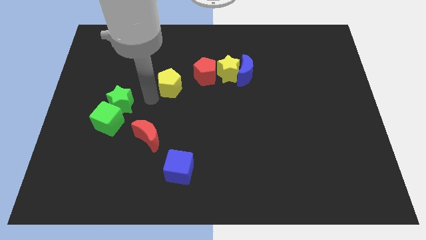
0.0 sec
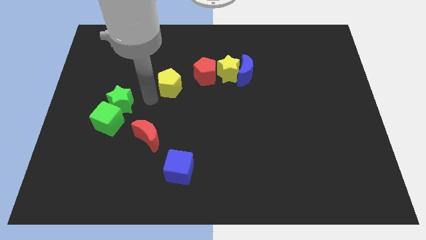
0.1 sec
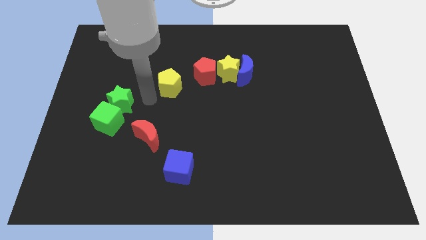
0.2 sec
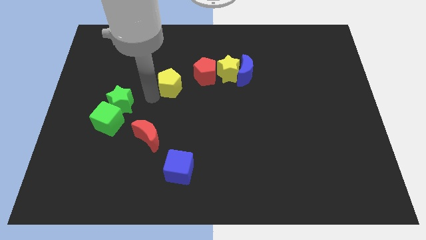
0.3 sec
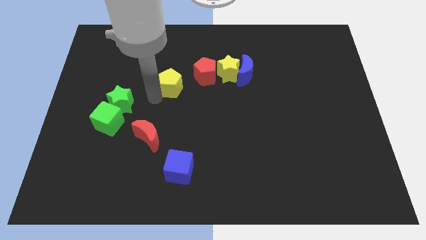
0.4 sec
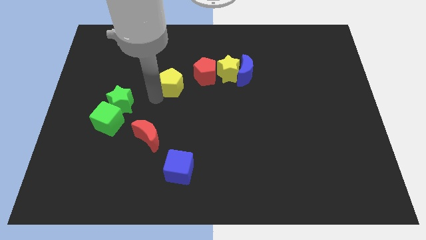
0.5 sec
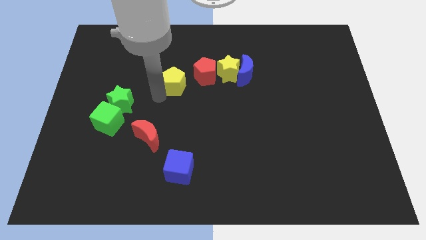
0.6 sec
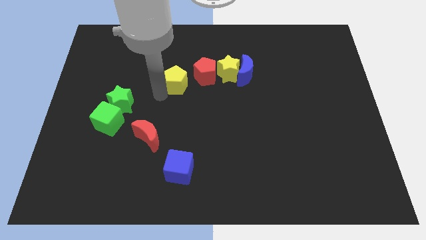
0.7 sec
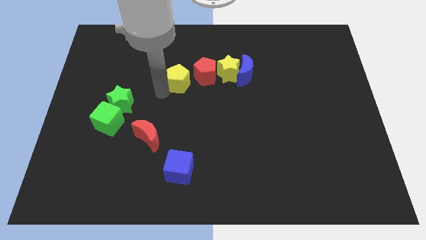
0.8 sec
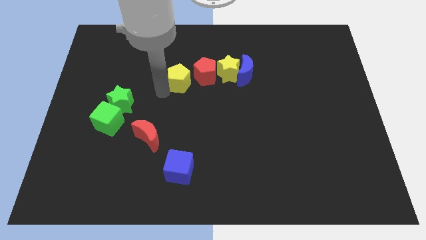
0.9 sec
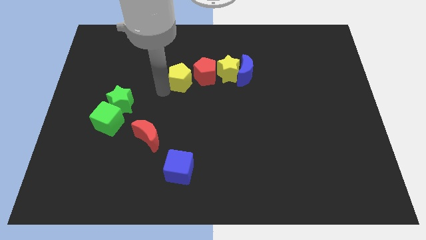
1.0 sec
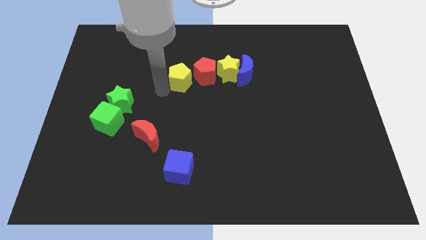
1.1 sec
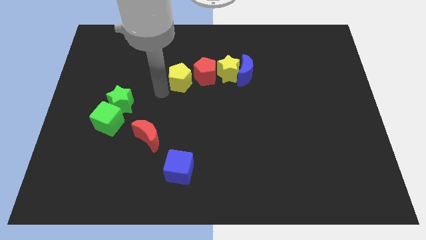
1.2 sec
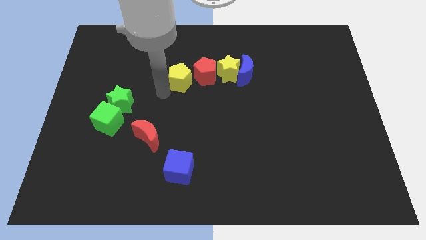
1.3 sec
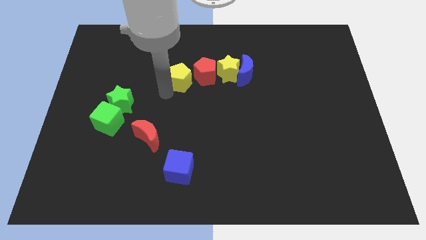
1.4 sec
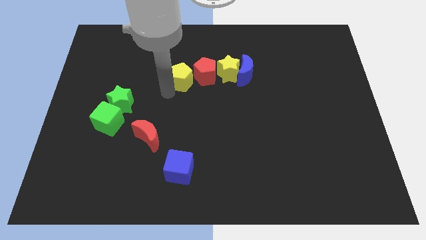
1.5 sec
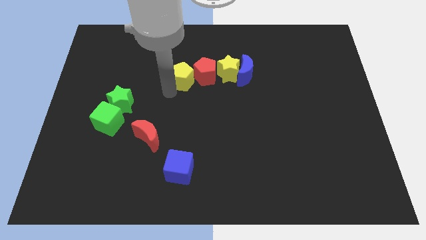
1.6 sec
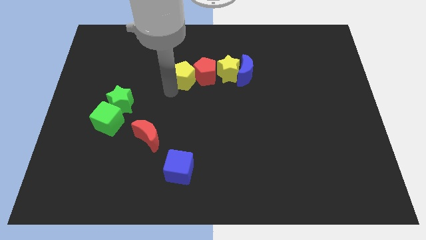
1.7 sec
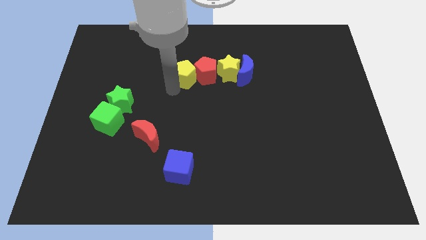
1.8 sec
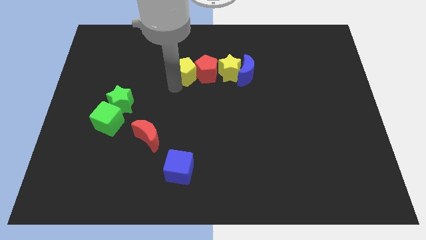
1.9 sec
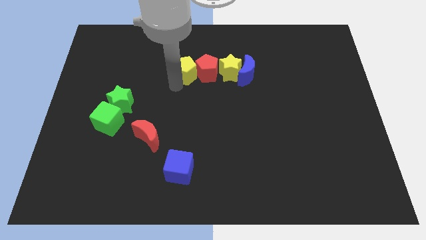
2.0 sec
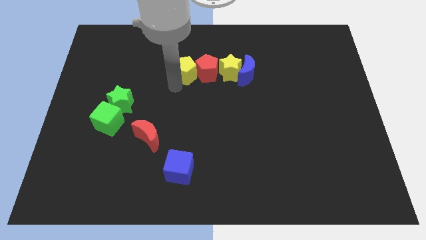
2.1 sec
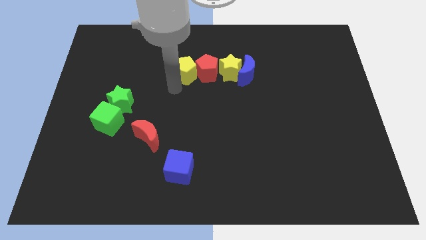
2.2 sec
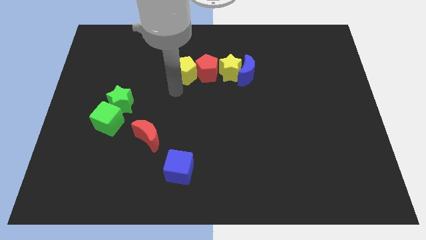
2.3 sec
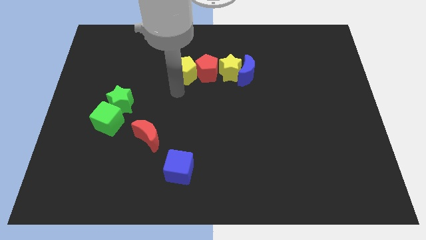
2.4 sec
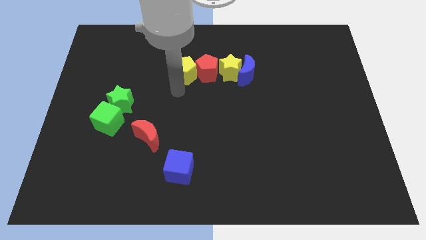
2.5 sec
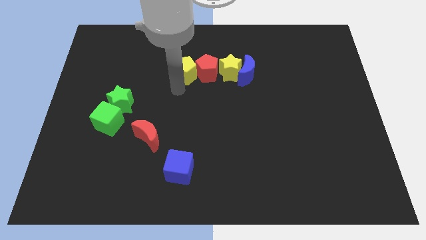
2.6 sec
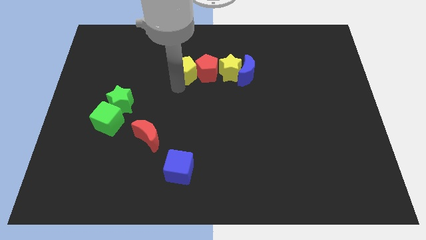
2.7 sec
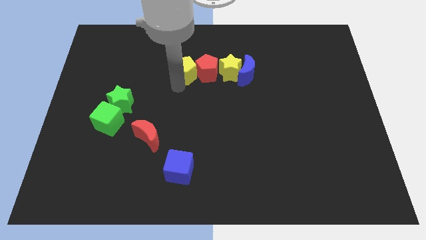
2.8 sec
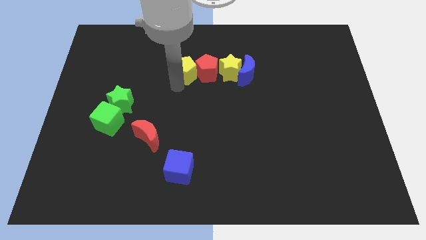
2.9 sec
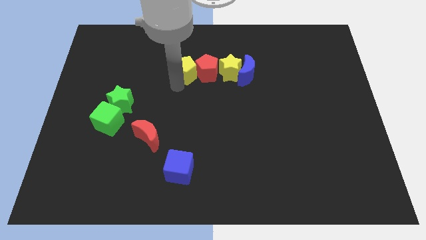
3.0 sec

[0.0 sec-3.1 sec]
place the yellow pentagon to the left of red pentagon

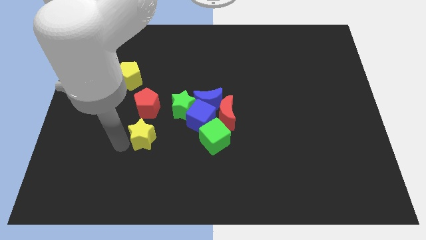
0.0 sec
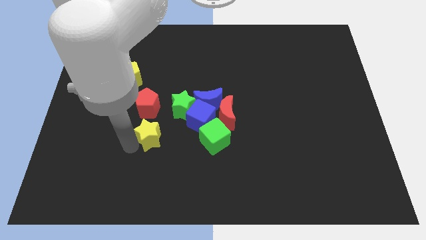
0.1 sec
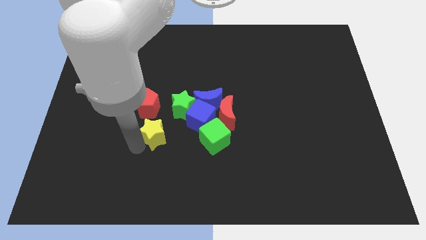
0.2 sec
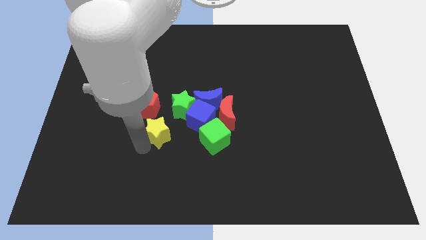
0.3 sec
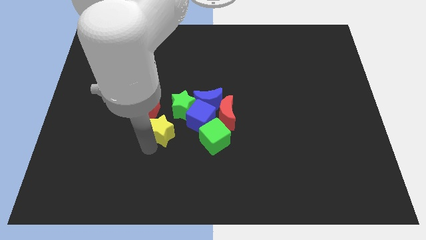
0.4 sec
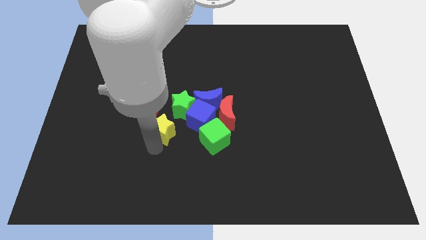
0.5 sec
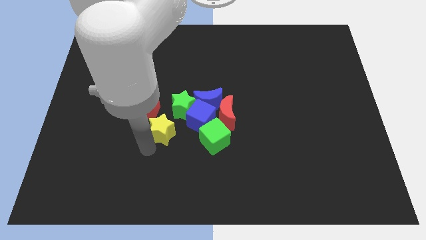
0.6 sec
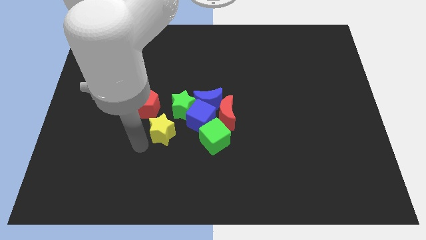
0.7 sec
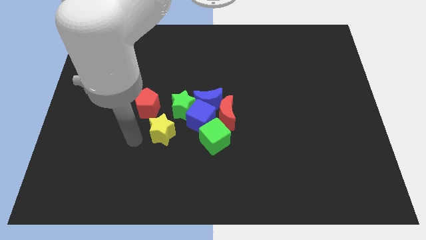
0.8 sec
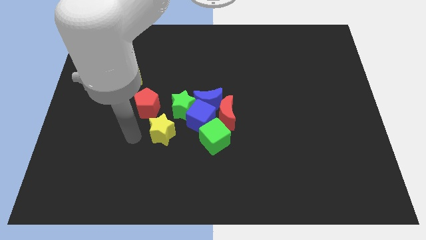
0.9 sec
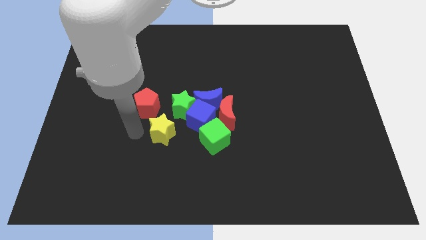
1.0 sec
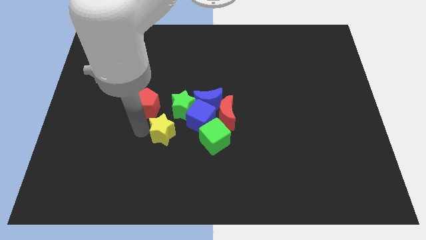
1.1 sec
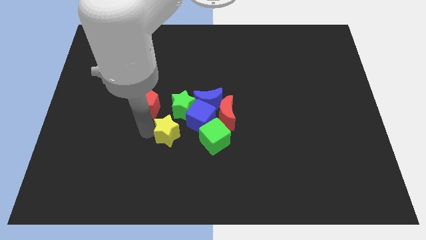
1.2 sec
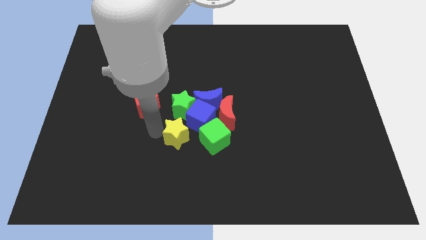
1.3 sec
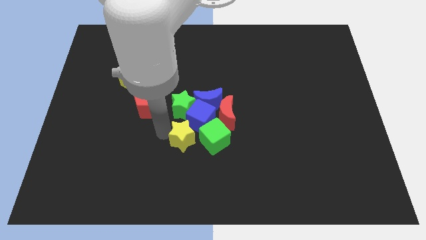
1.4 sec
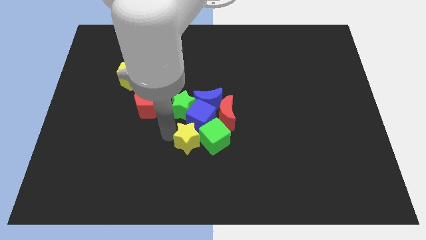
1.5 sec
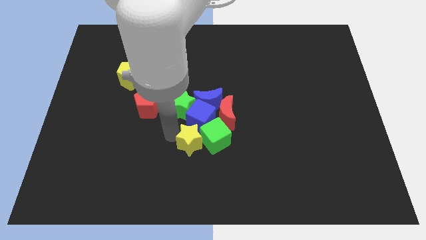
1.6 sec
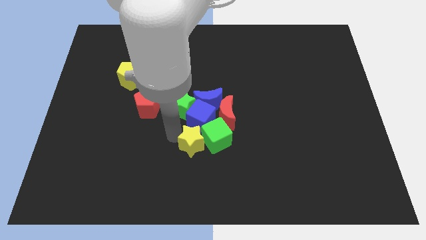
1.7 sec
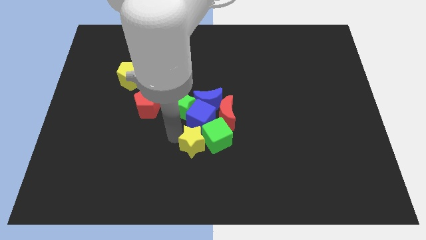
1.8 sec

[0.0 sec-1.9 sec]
push yellow star to the left of green cube

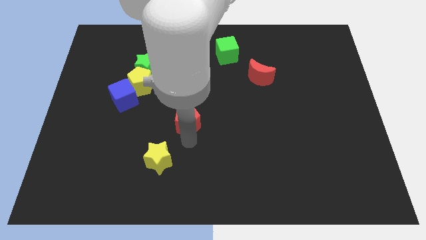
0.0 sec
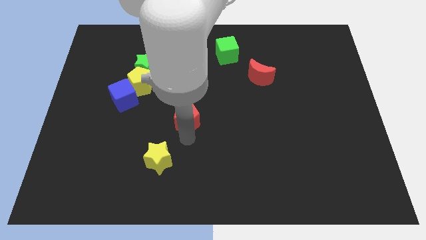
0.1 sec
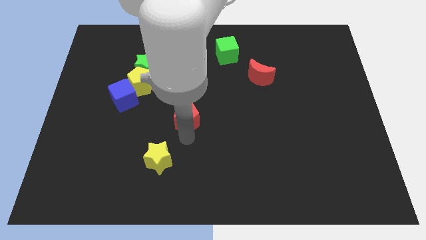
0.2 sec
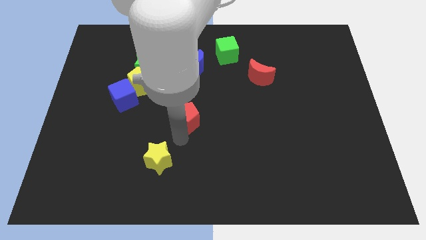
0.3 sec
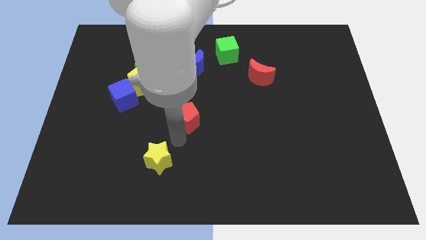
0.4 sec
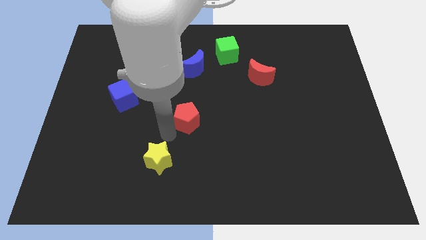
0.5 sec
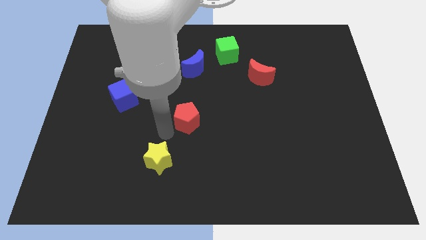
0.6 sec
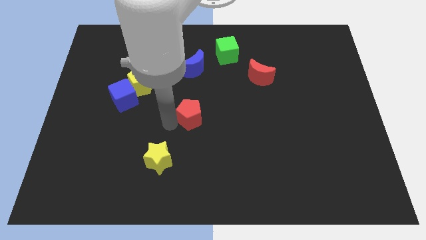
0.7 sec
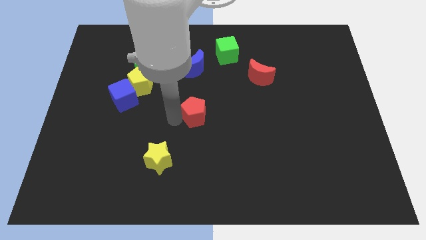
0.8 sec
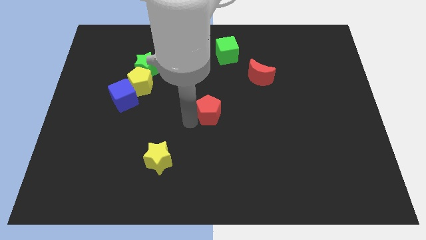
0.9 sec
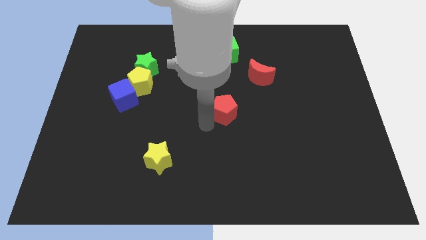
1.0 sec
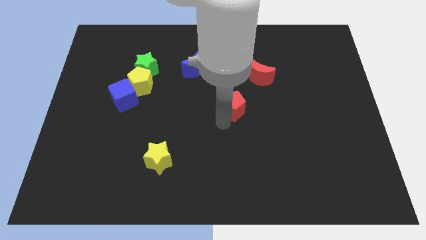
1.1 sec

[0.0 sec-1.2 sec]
drag the red pentagon vertically below the green cube

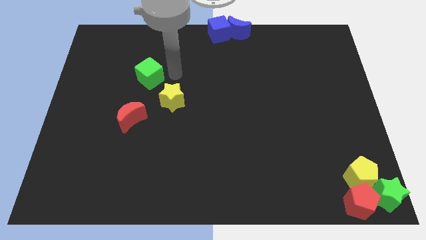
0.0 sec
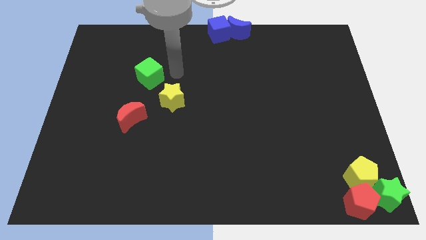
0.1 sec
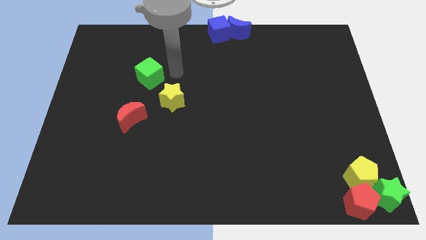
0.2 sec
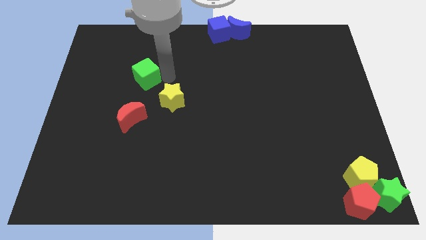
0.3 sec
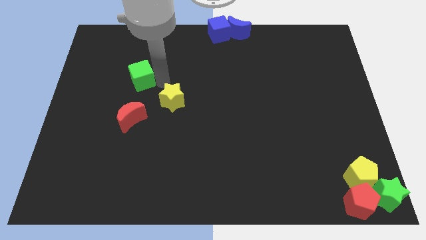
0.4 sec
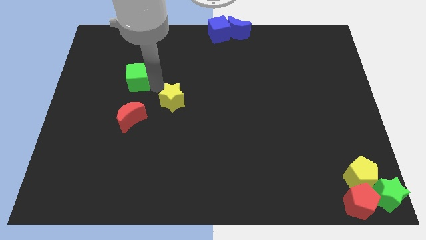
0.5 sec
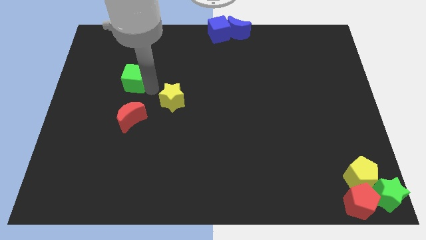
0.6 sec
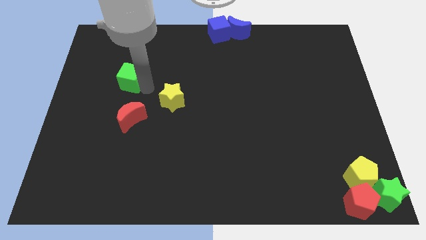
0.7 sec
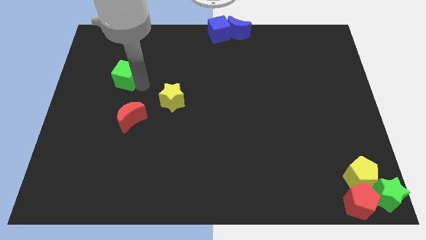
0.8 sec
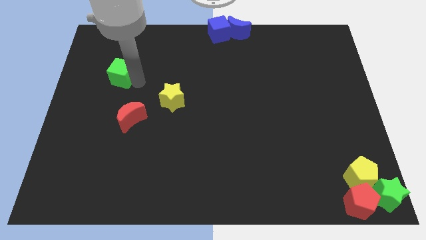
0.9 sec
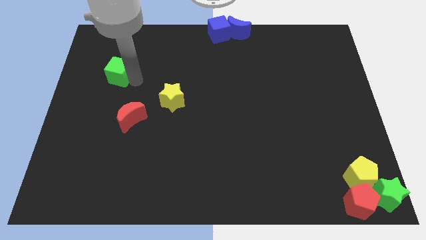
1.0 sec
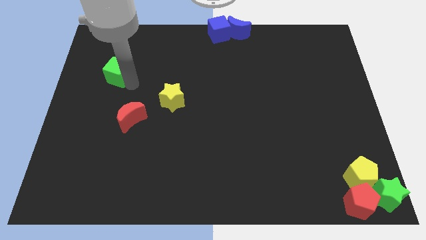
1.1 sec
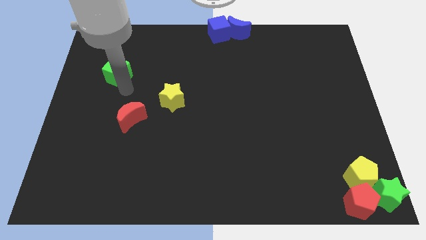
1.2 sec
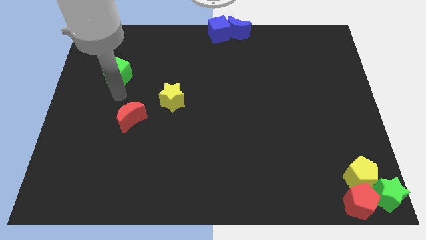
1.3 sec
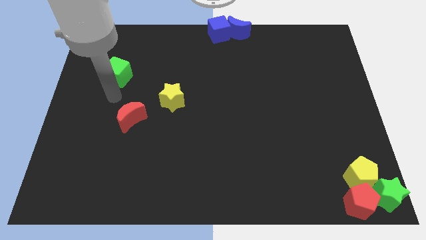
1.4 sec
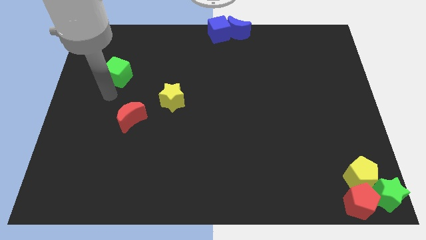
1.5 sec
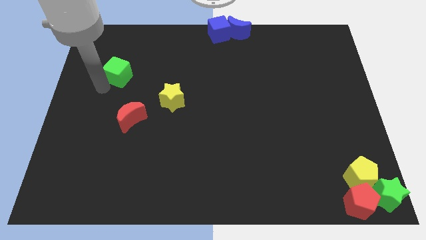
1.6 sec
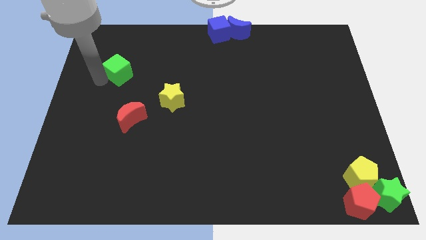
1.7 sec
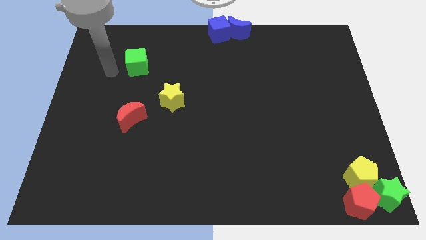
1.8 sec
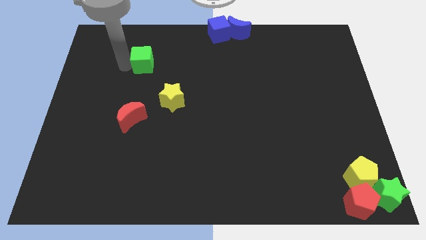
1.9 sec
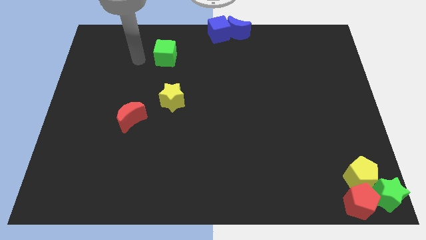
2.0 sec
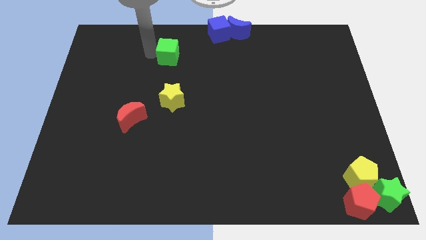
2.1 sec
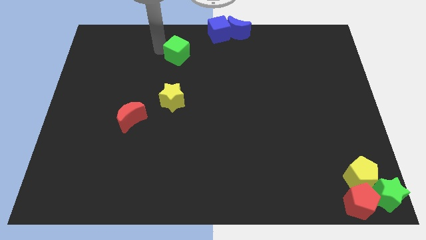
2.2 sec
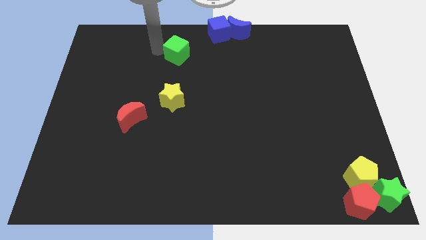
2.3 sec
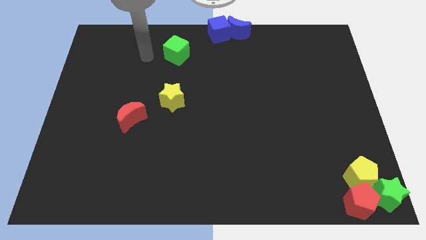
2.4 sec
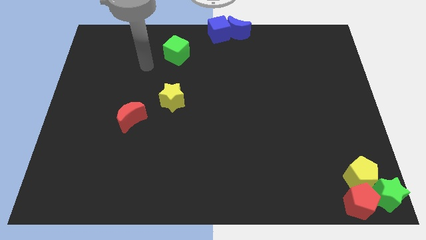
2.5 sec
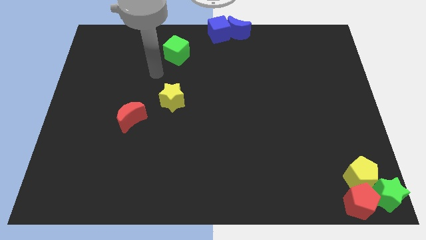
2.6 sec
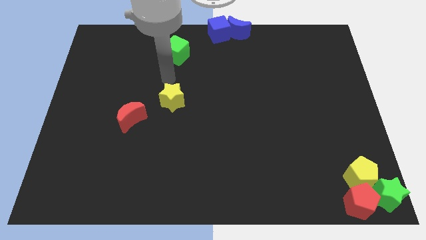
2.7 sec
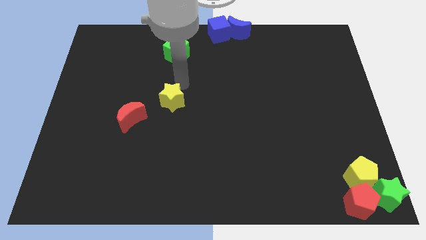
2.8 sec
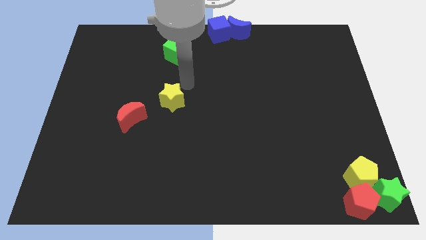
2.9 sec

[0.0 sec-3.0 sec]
push the green cube towards the blue block

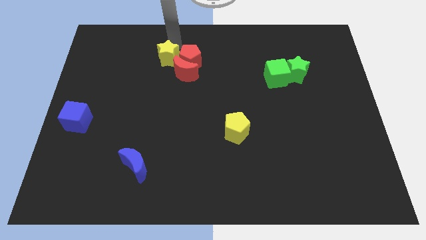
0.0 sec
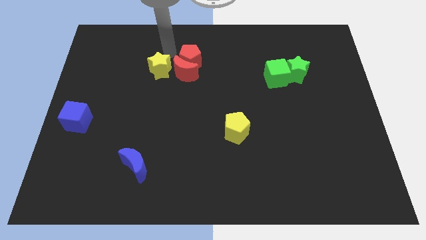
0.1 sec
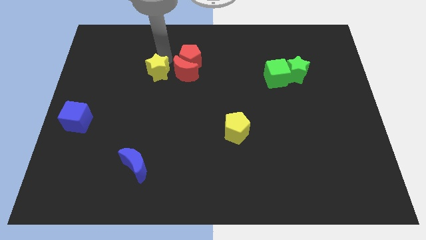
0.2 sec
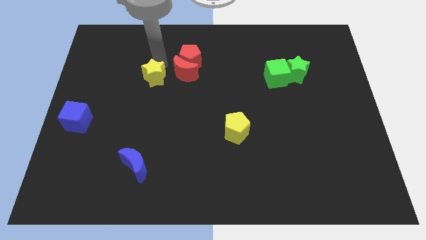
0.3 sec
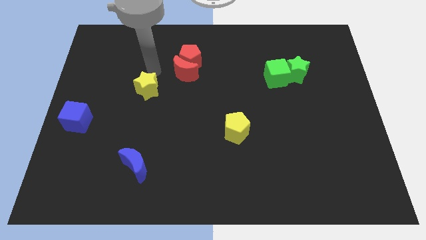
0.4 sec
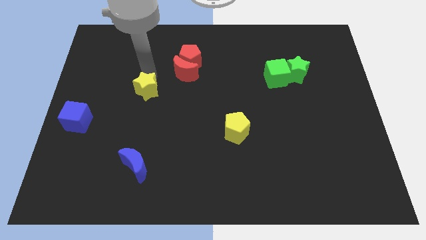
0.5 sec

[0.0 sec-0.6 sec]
move the yellow star slightly downwards
